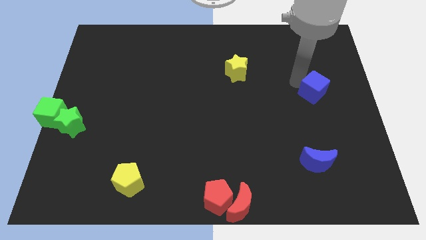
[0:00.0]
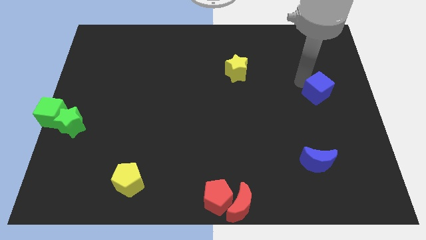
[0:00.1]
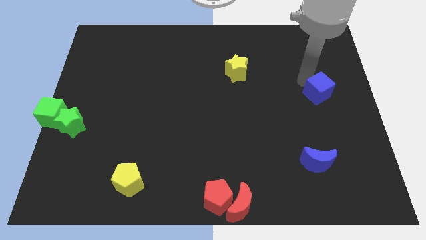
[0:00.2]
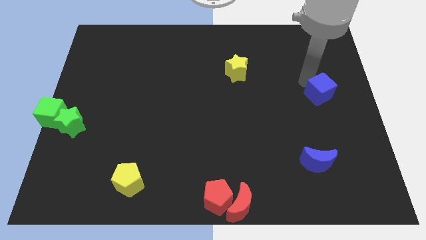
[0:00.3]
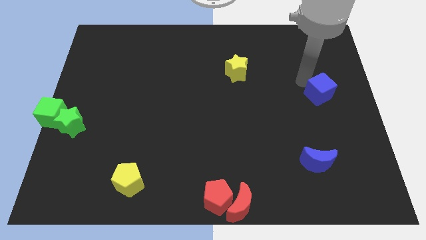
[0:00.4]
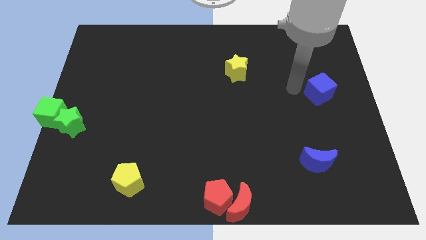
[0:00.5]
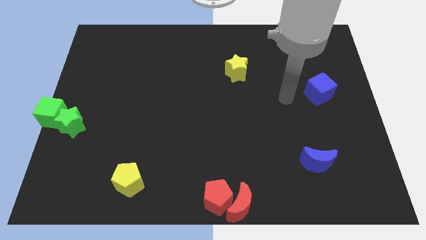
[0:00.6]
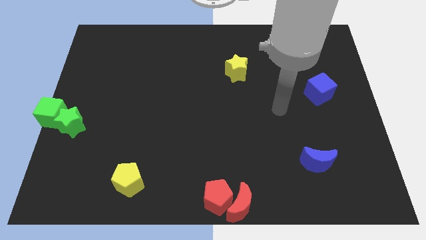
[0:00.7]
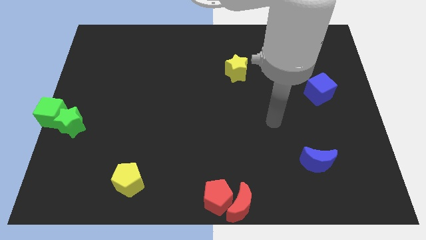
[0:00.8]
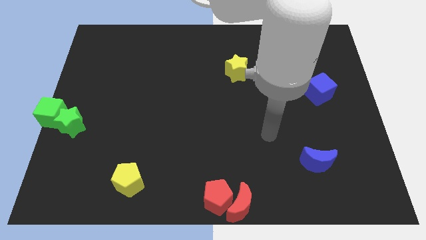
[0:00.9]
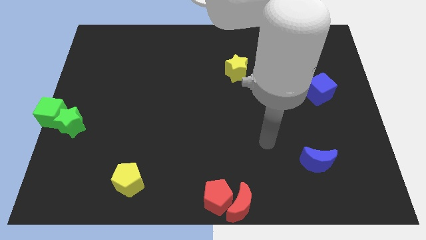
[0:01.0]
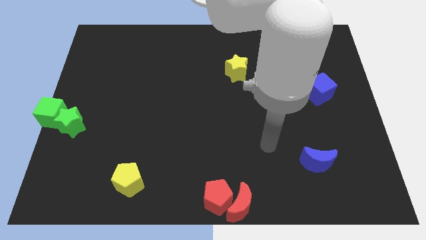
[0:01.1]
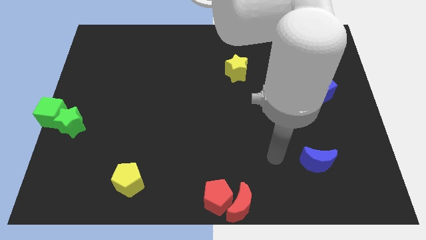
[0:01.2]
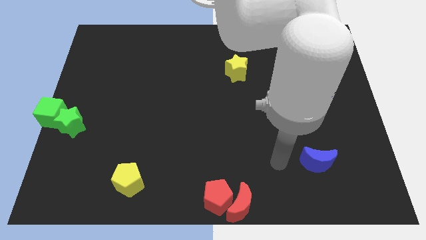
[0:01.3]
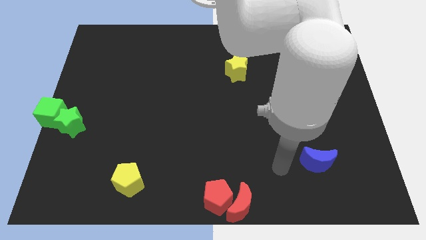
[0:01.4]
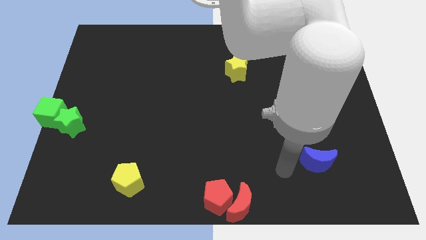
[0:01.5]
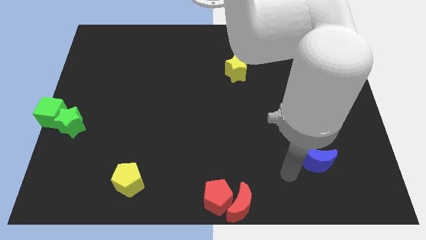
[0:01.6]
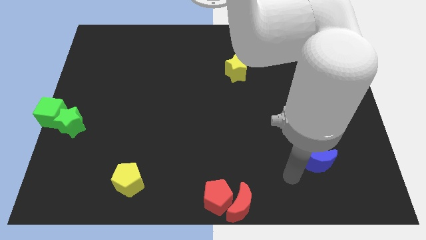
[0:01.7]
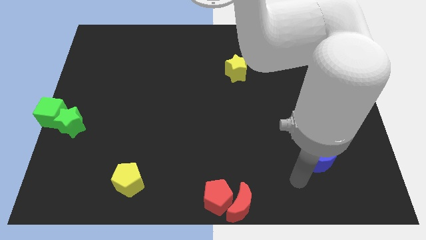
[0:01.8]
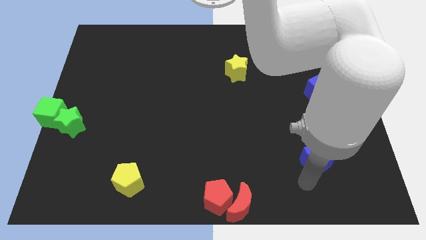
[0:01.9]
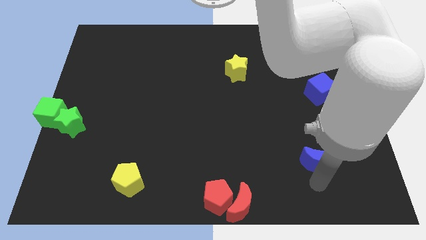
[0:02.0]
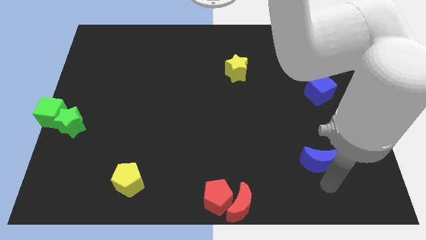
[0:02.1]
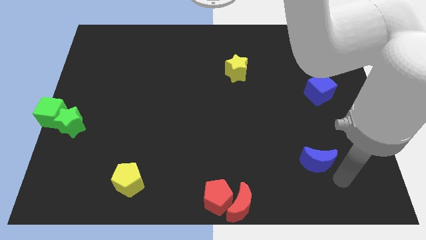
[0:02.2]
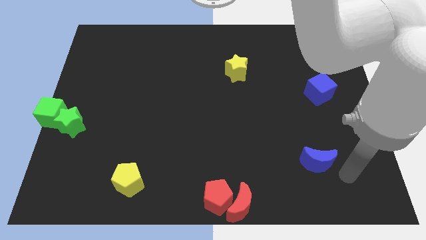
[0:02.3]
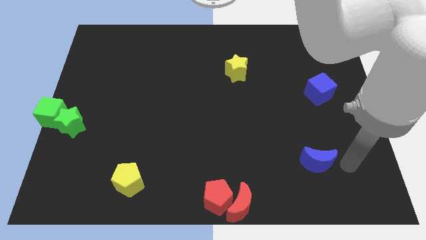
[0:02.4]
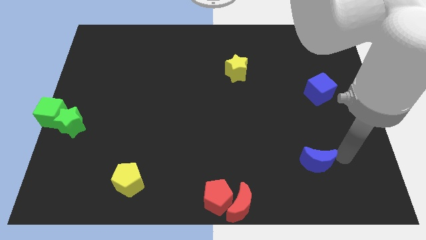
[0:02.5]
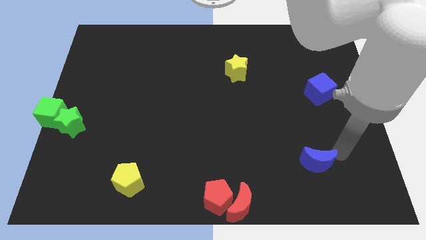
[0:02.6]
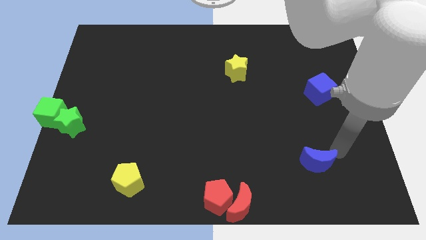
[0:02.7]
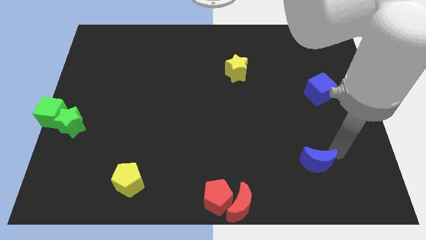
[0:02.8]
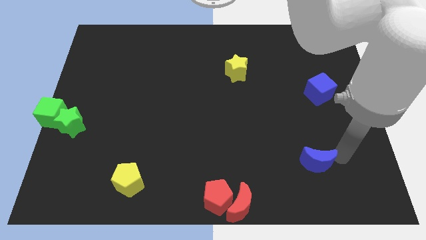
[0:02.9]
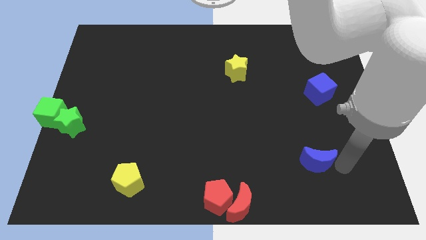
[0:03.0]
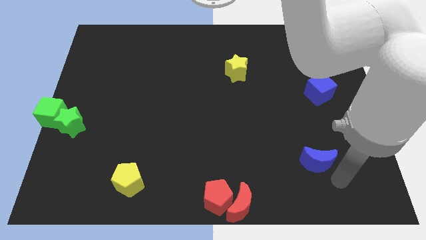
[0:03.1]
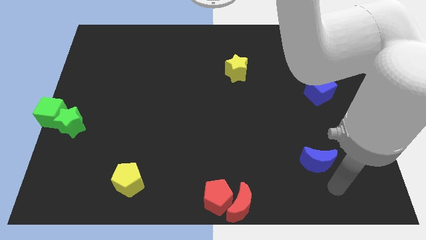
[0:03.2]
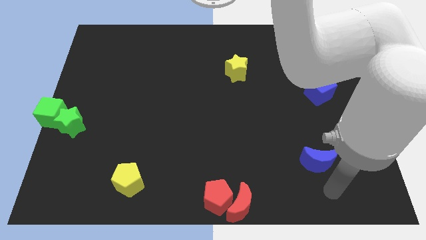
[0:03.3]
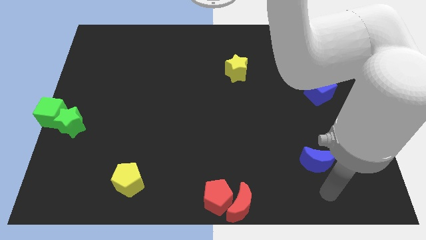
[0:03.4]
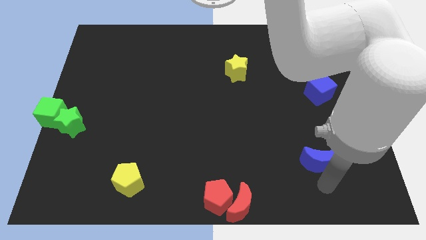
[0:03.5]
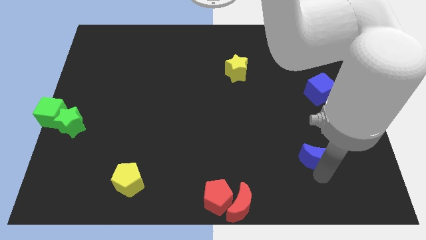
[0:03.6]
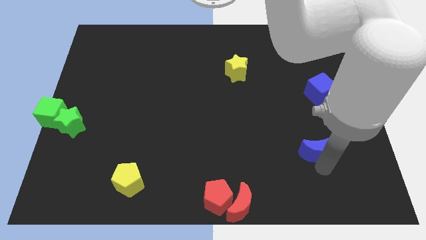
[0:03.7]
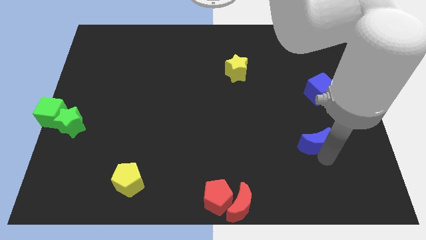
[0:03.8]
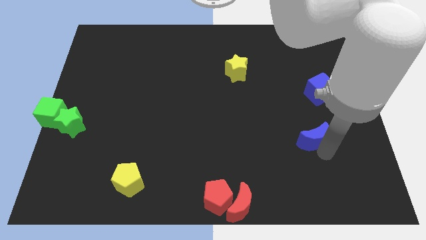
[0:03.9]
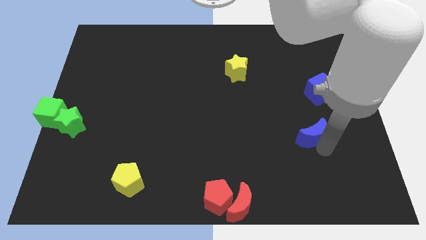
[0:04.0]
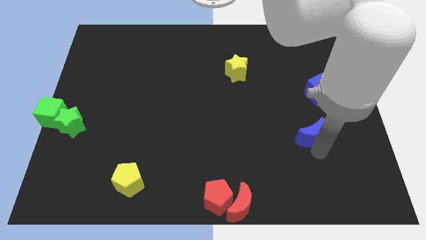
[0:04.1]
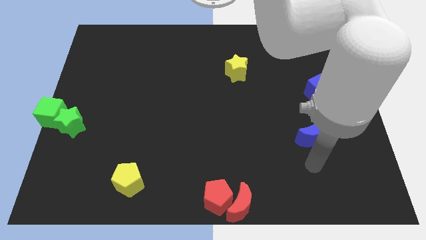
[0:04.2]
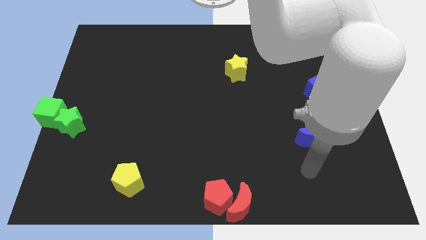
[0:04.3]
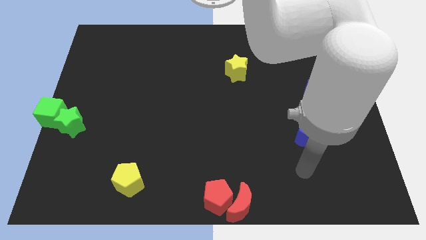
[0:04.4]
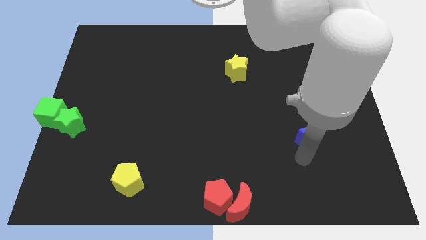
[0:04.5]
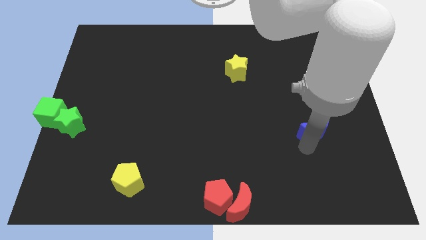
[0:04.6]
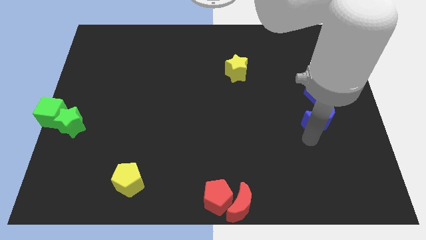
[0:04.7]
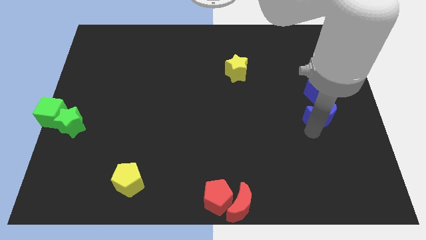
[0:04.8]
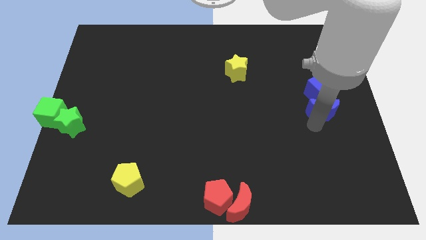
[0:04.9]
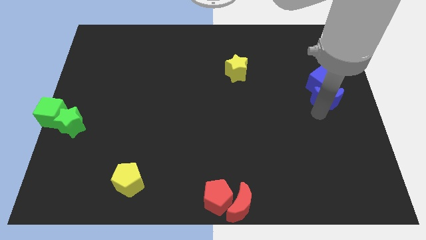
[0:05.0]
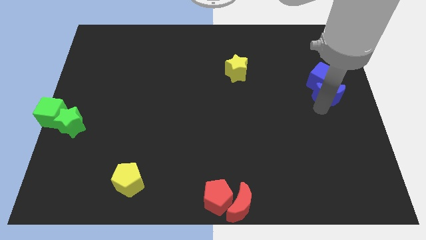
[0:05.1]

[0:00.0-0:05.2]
push the blue moon into the blue cube

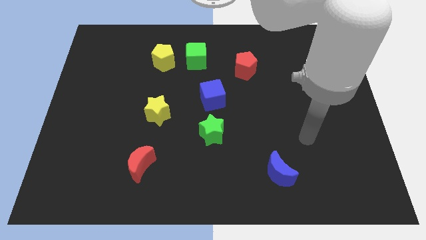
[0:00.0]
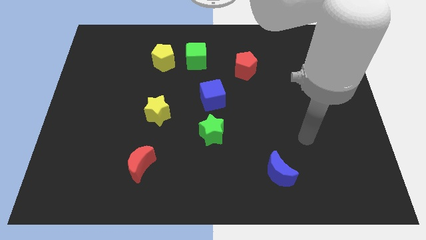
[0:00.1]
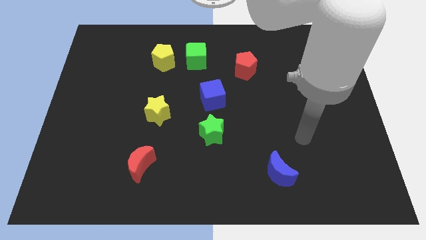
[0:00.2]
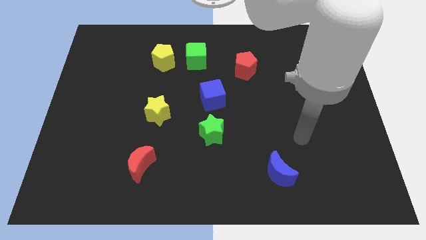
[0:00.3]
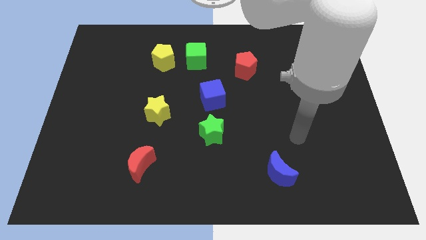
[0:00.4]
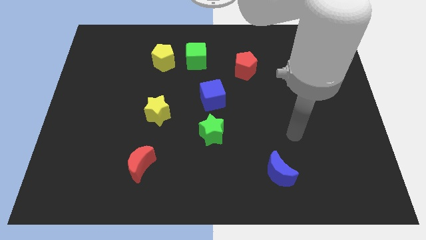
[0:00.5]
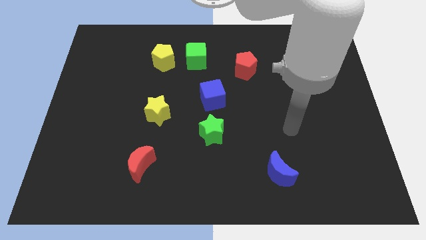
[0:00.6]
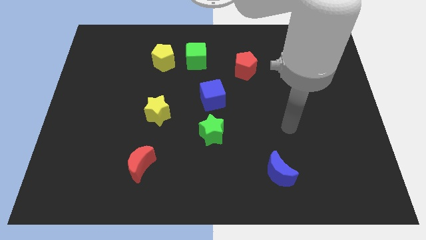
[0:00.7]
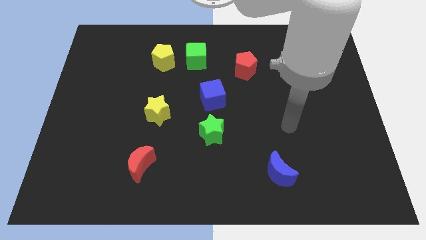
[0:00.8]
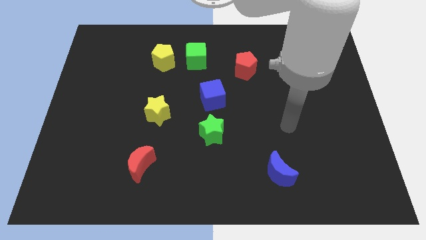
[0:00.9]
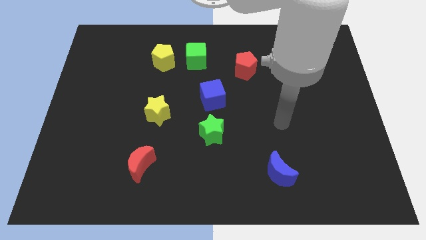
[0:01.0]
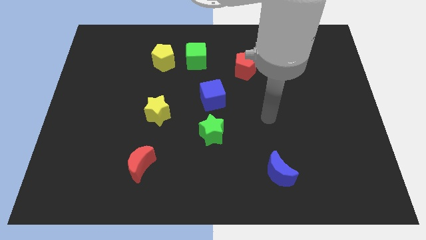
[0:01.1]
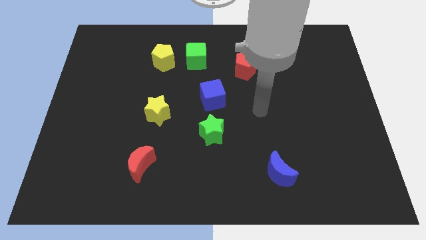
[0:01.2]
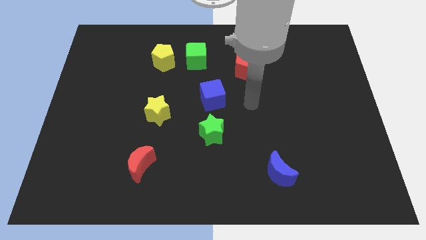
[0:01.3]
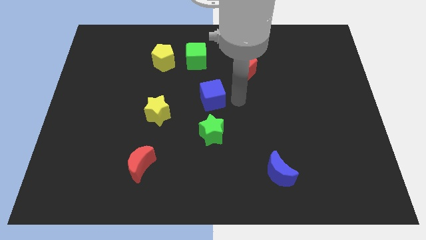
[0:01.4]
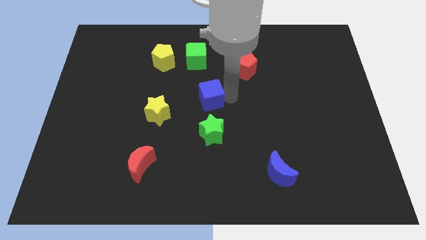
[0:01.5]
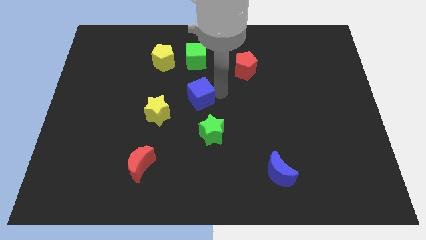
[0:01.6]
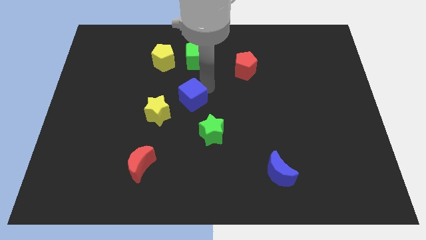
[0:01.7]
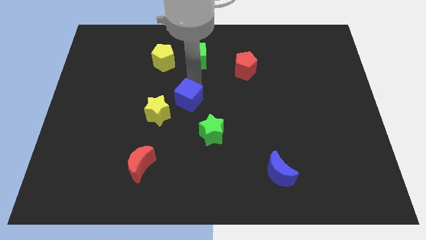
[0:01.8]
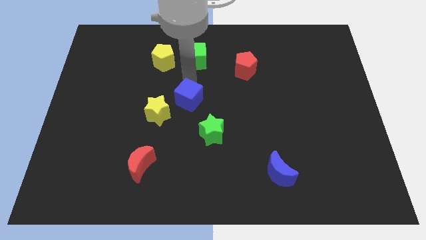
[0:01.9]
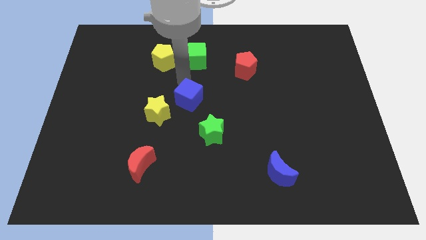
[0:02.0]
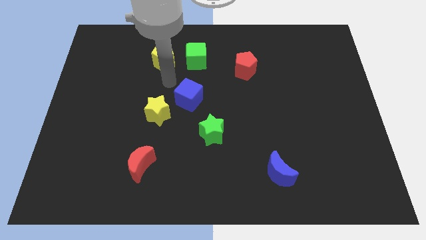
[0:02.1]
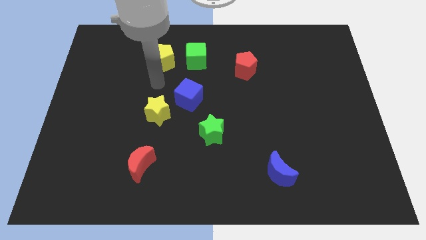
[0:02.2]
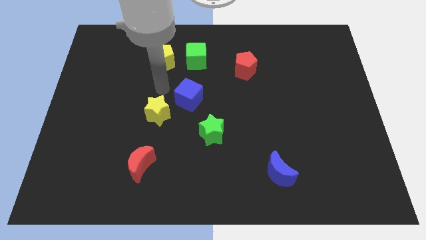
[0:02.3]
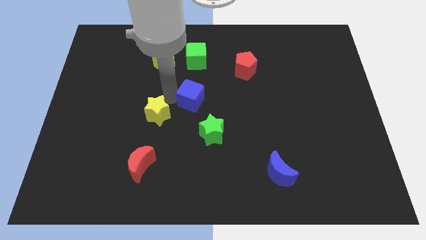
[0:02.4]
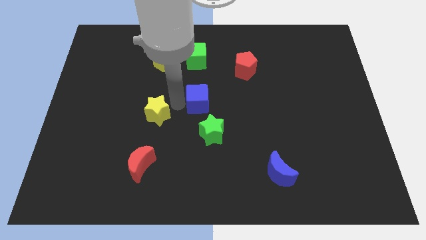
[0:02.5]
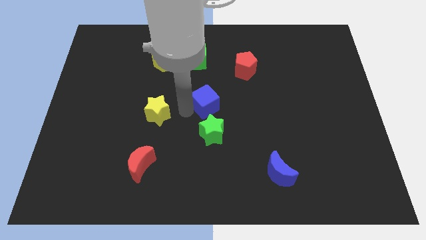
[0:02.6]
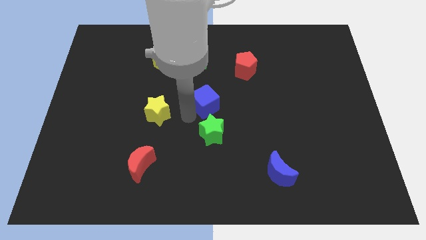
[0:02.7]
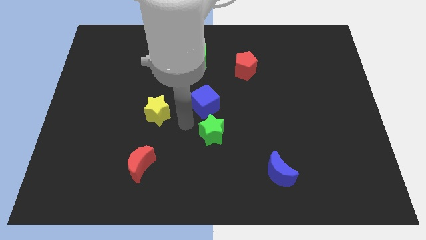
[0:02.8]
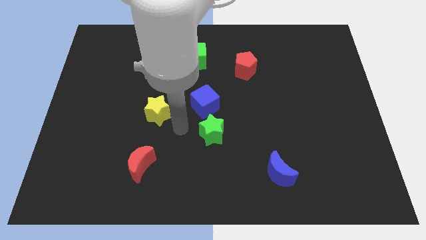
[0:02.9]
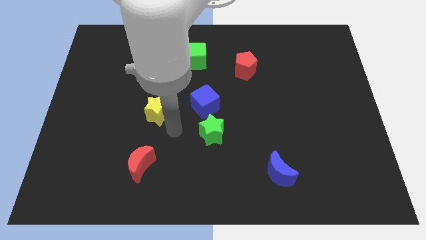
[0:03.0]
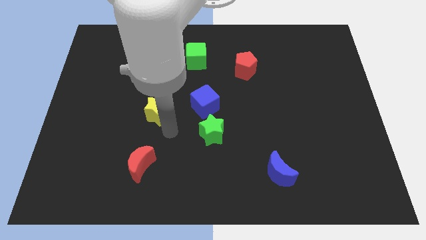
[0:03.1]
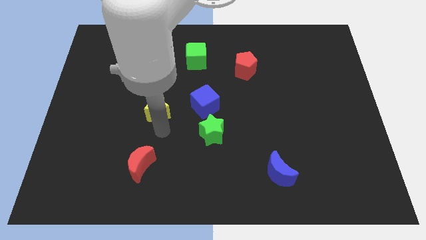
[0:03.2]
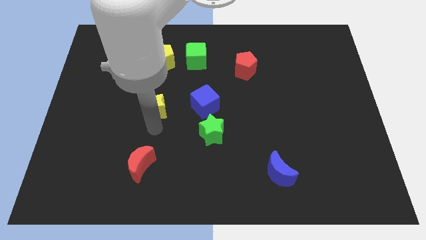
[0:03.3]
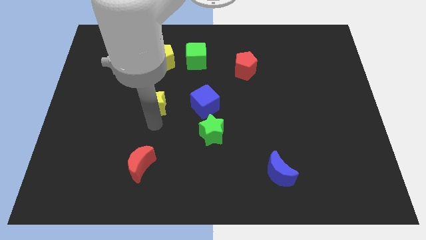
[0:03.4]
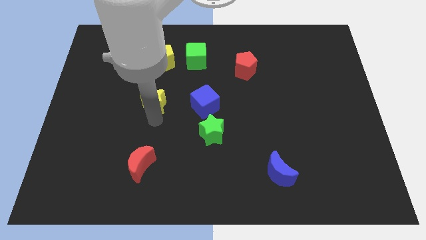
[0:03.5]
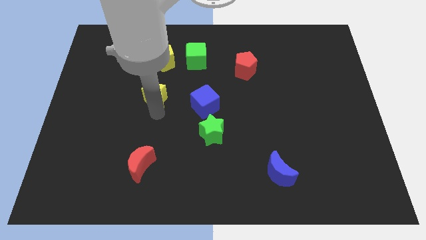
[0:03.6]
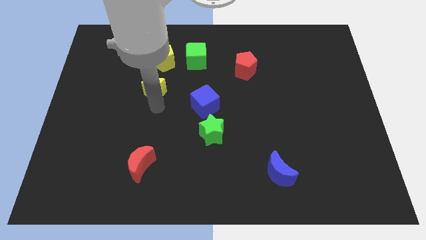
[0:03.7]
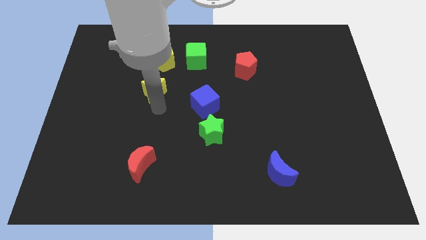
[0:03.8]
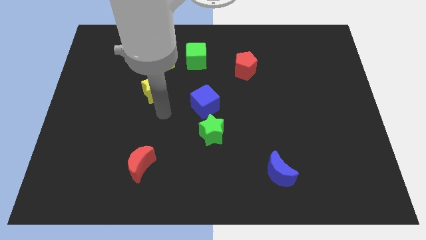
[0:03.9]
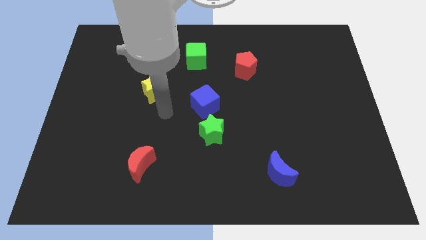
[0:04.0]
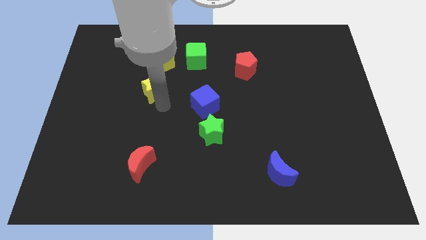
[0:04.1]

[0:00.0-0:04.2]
place the blue cube on top of the green star
